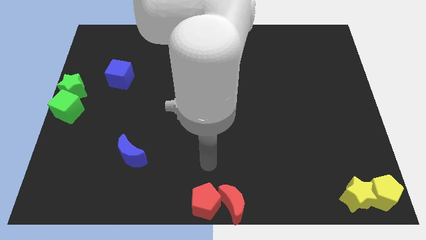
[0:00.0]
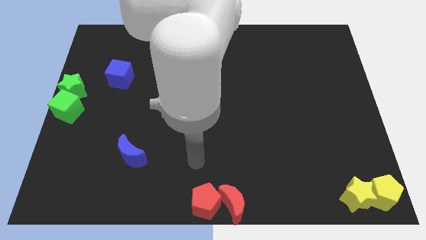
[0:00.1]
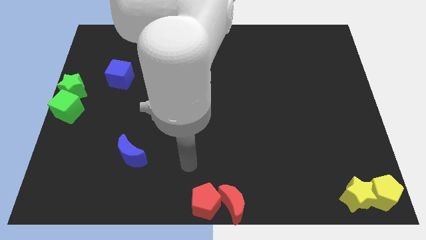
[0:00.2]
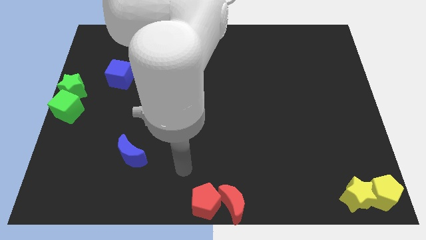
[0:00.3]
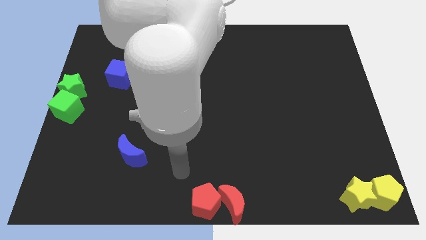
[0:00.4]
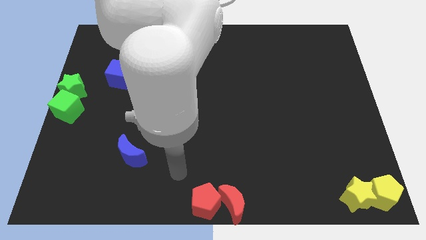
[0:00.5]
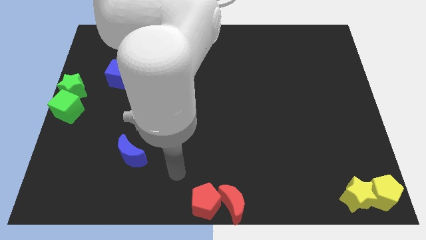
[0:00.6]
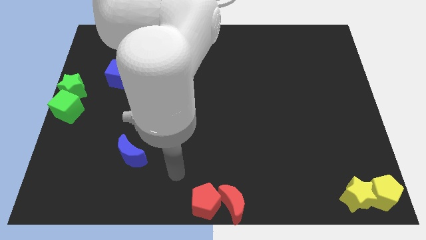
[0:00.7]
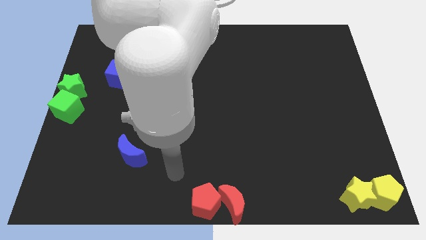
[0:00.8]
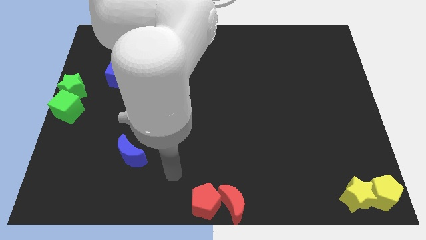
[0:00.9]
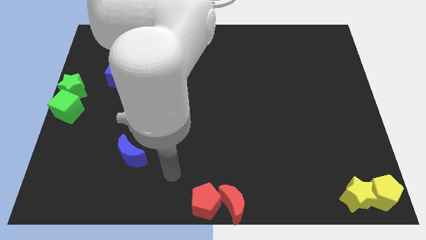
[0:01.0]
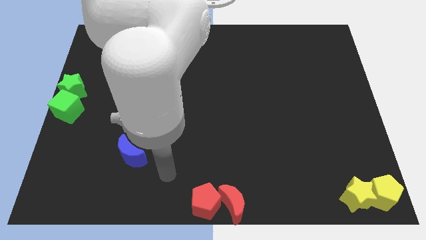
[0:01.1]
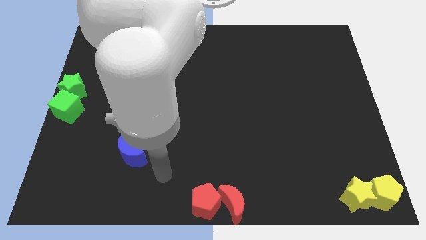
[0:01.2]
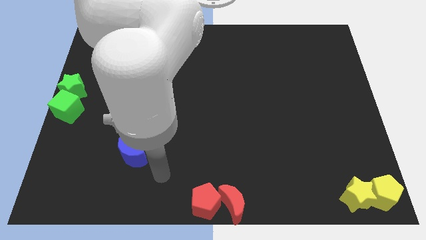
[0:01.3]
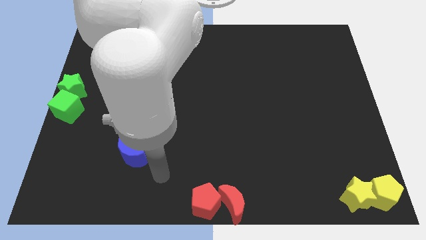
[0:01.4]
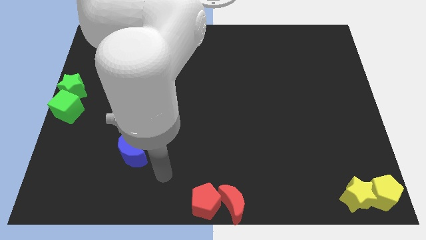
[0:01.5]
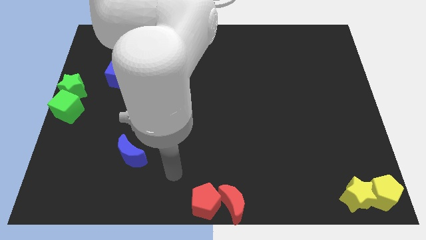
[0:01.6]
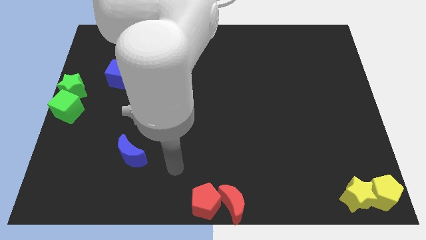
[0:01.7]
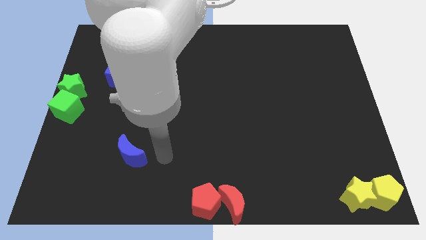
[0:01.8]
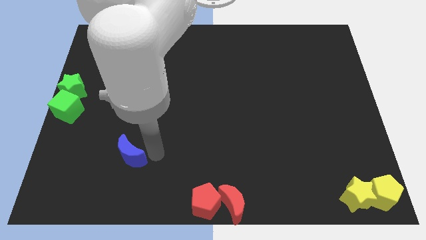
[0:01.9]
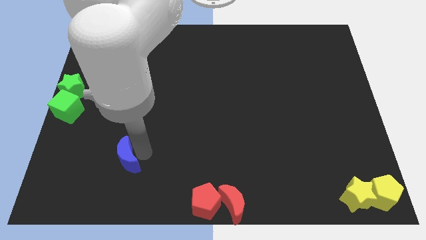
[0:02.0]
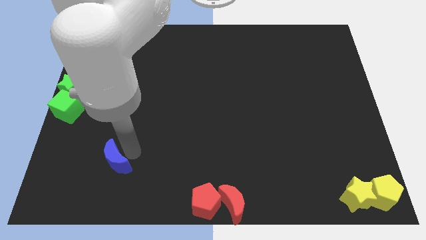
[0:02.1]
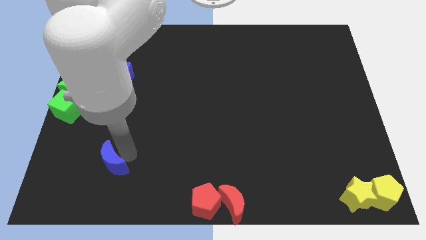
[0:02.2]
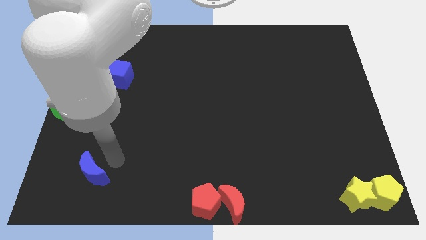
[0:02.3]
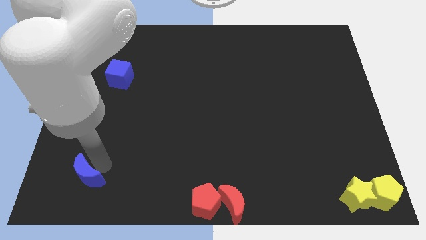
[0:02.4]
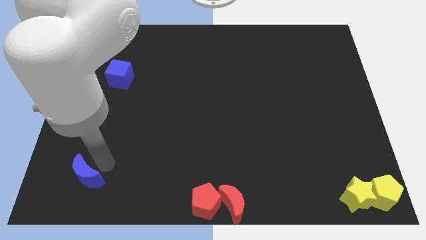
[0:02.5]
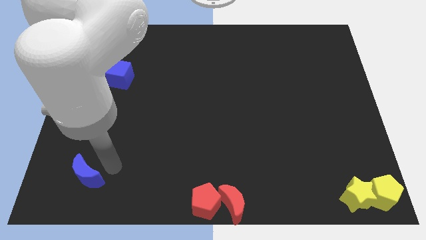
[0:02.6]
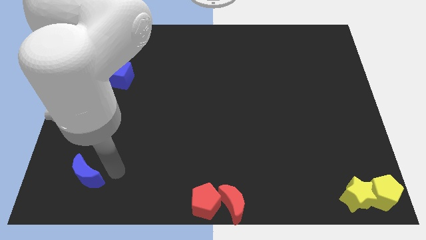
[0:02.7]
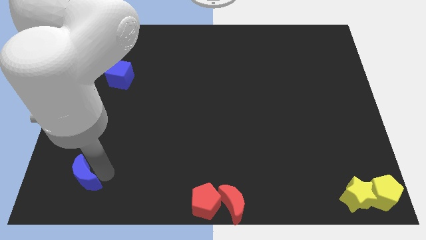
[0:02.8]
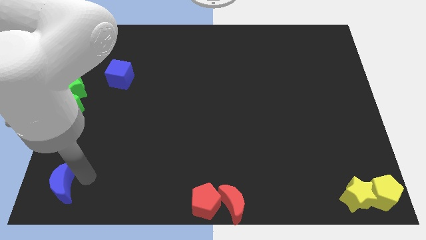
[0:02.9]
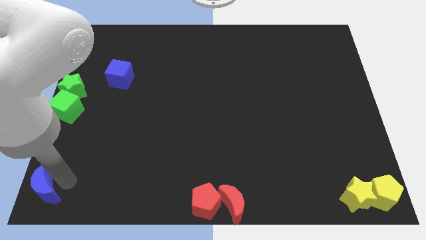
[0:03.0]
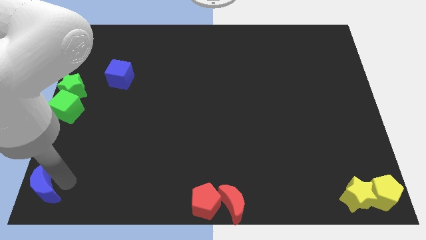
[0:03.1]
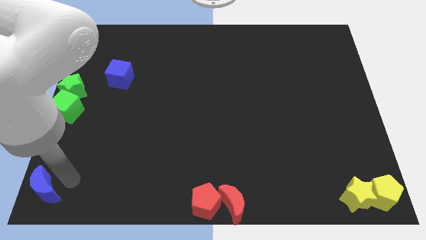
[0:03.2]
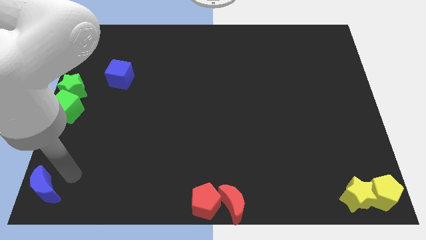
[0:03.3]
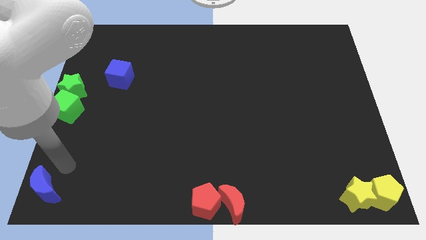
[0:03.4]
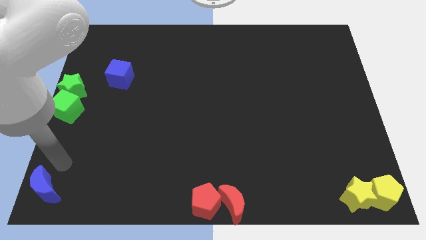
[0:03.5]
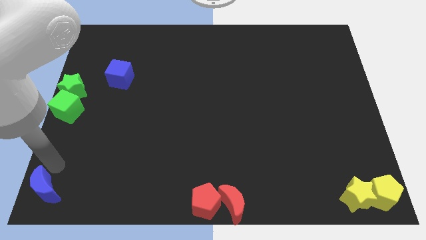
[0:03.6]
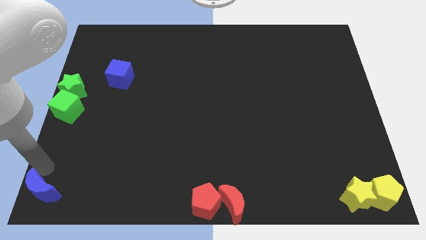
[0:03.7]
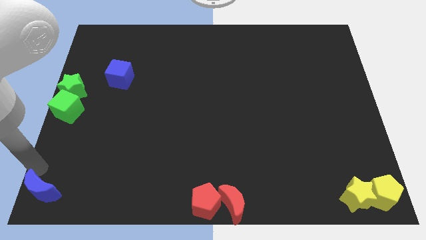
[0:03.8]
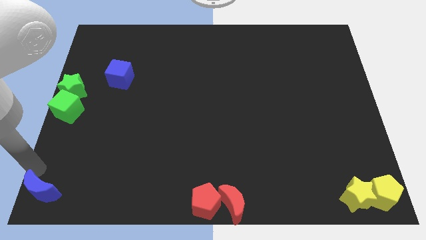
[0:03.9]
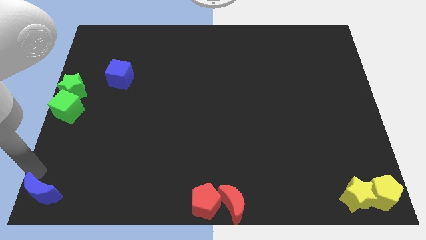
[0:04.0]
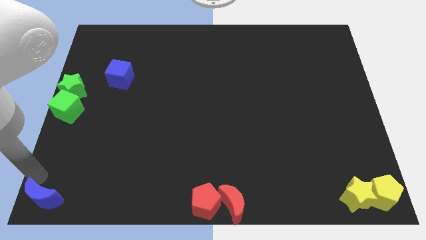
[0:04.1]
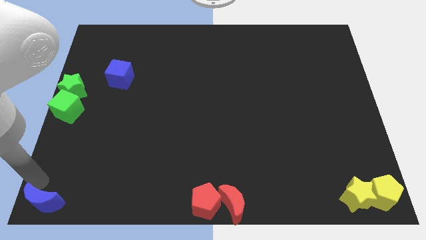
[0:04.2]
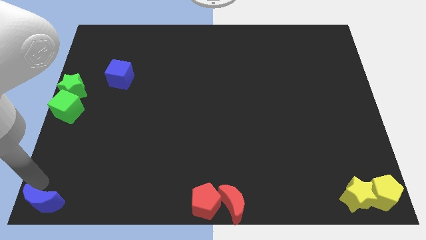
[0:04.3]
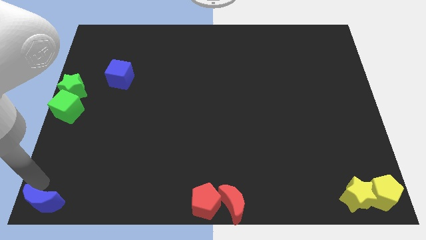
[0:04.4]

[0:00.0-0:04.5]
push the blue crescent towards the left bottom corner of the board

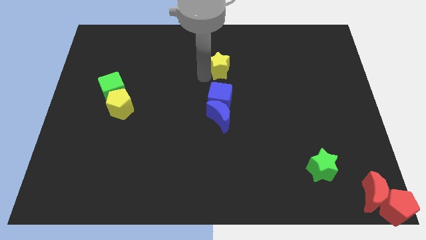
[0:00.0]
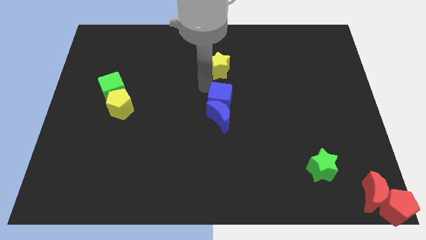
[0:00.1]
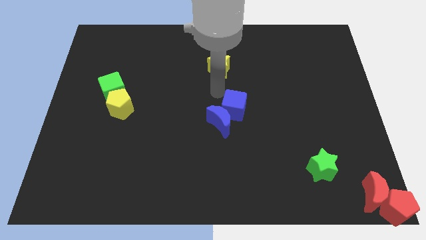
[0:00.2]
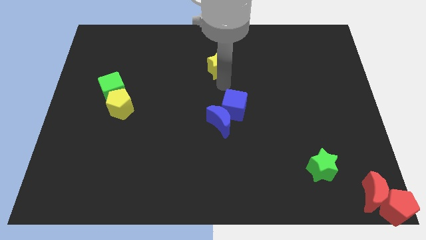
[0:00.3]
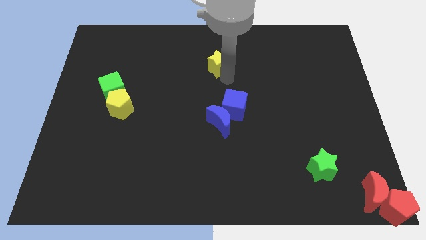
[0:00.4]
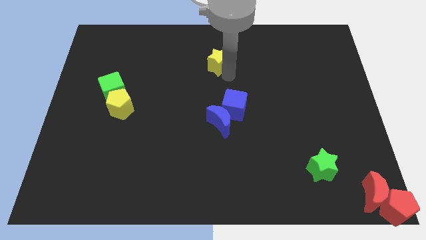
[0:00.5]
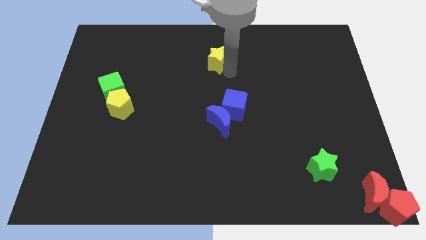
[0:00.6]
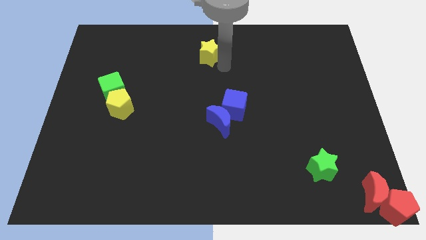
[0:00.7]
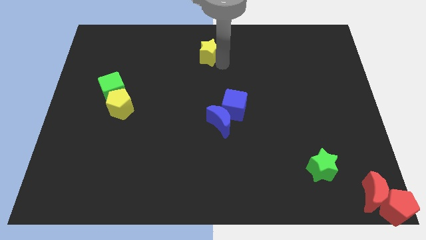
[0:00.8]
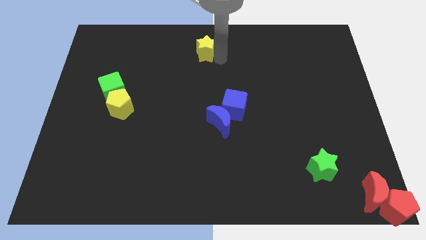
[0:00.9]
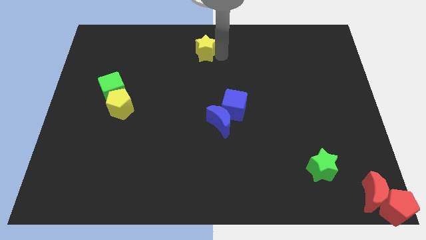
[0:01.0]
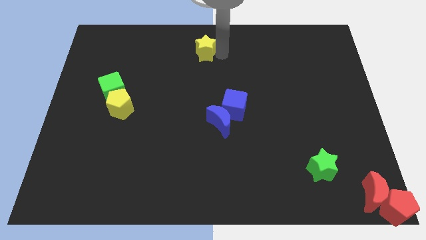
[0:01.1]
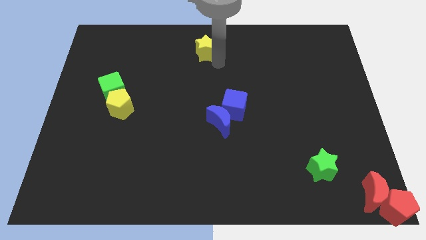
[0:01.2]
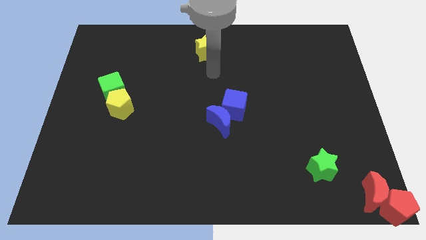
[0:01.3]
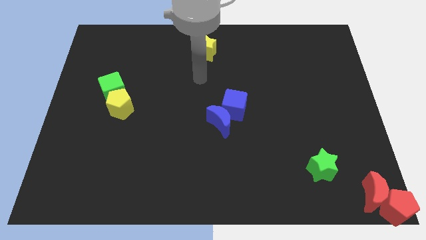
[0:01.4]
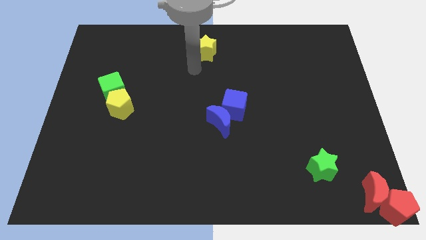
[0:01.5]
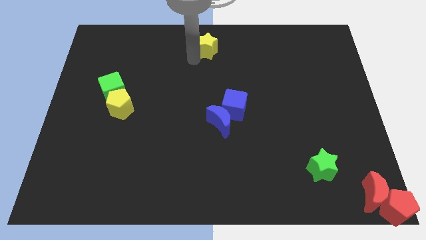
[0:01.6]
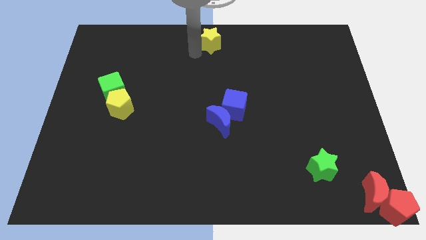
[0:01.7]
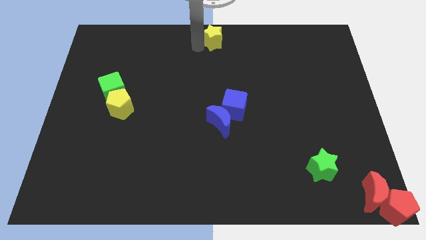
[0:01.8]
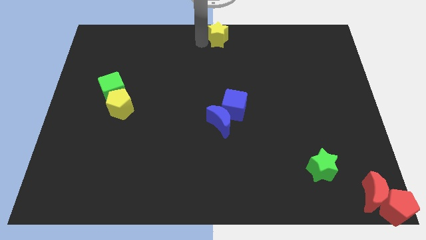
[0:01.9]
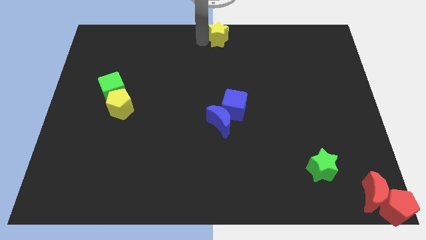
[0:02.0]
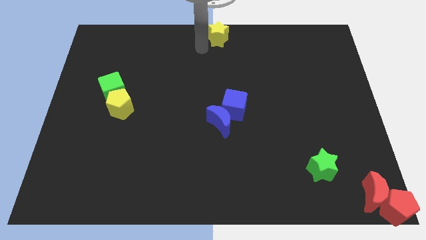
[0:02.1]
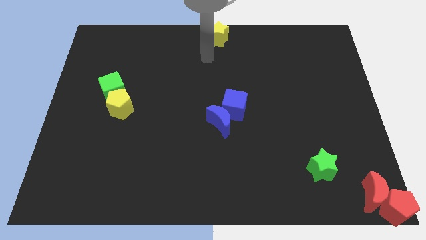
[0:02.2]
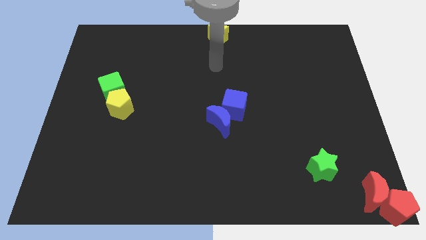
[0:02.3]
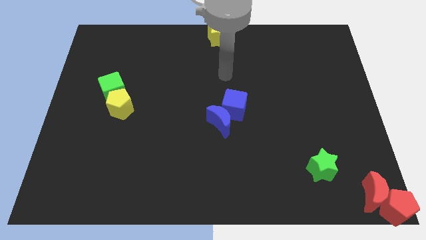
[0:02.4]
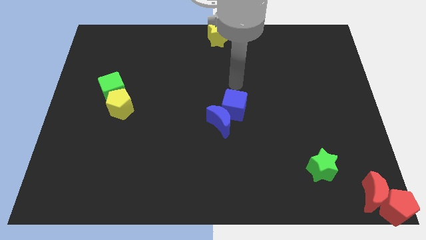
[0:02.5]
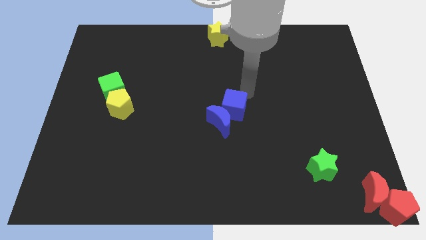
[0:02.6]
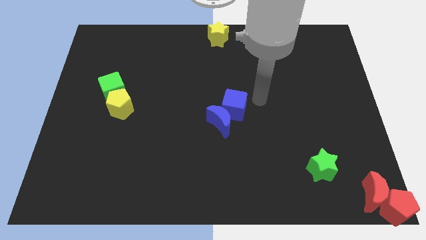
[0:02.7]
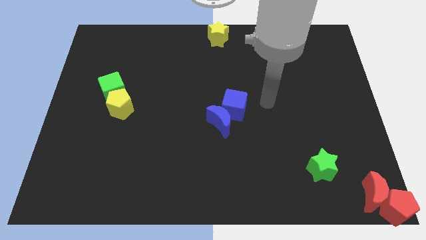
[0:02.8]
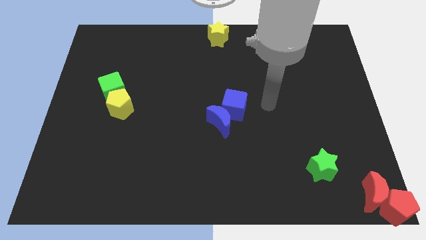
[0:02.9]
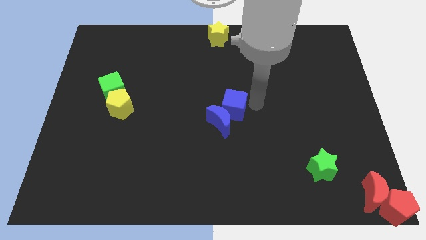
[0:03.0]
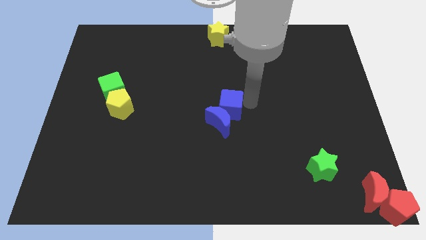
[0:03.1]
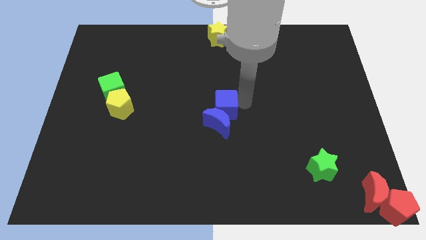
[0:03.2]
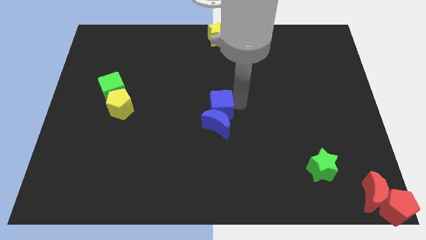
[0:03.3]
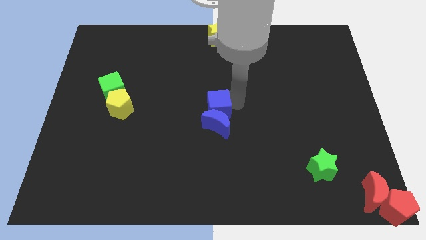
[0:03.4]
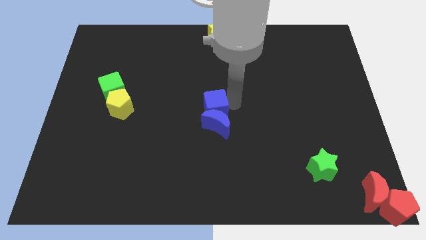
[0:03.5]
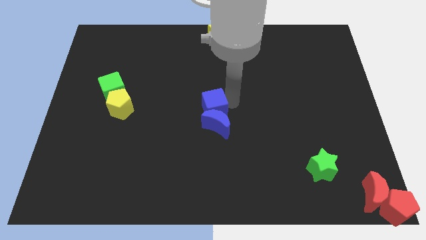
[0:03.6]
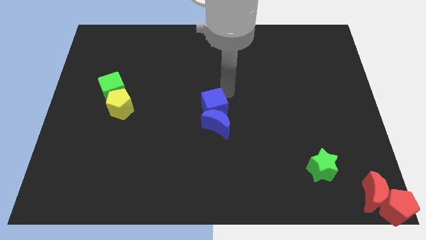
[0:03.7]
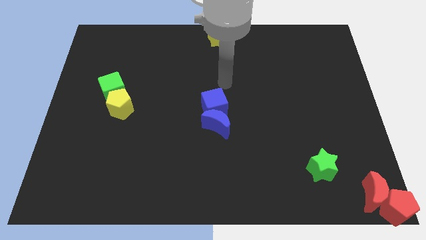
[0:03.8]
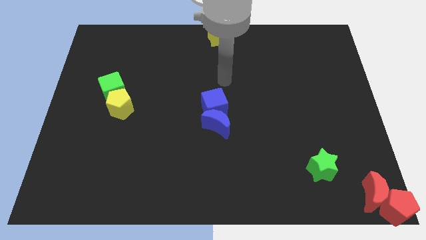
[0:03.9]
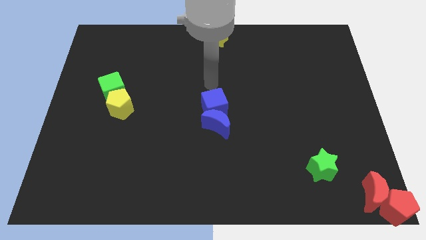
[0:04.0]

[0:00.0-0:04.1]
move the yellow star to the top center of the board

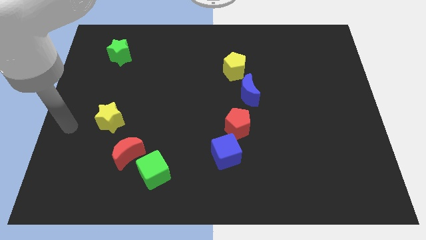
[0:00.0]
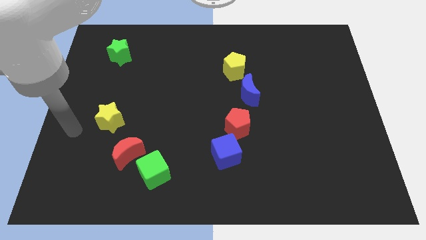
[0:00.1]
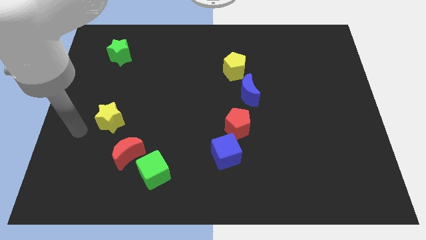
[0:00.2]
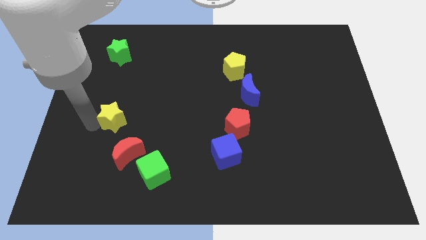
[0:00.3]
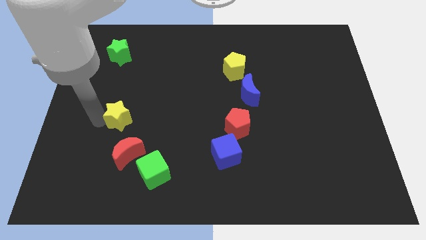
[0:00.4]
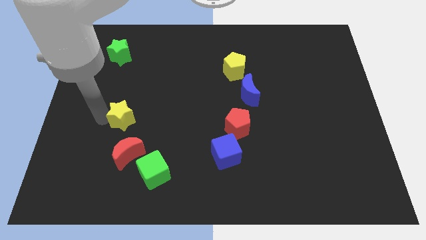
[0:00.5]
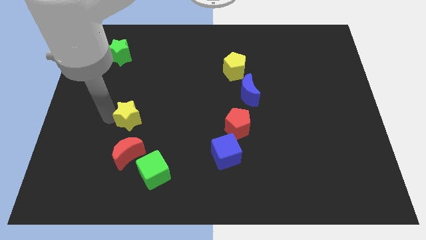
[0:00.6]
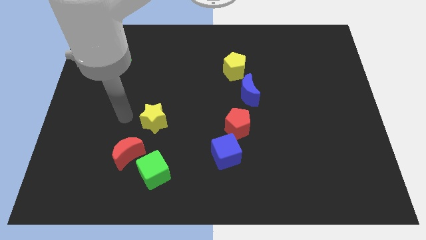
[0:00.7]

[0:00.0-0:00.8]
push the yellow star to the right
